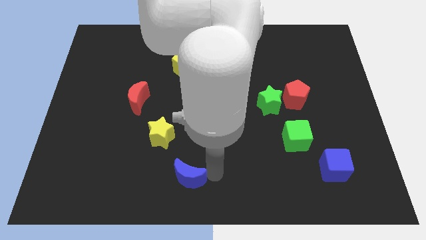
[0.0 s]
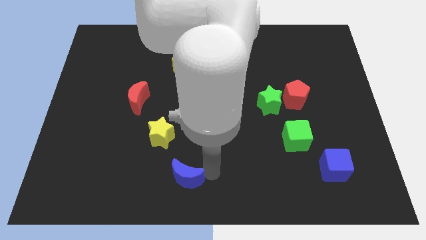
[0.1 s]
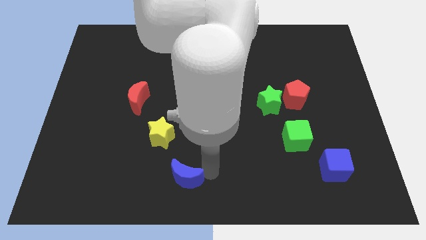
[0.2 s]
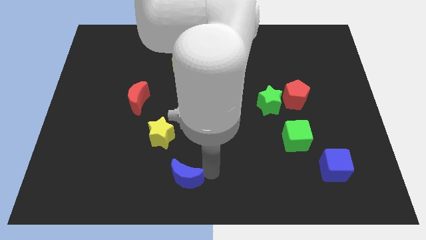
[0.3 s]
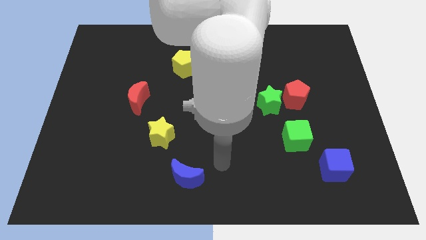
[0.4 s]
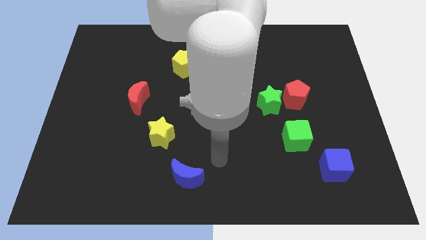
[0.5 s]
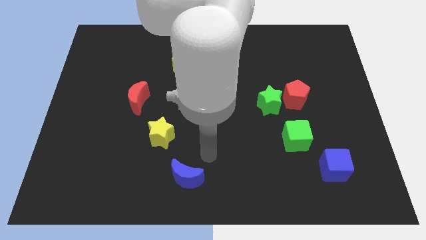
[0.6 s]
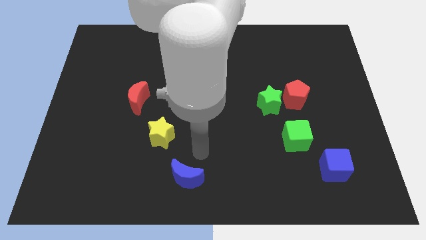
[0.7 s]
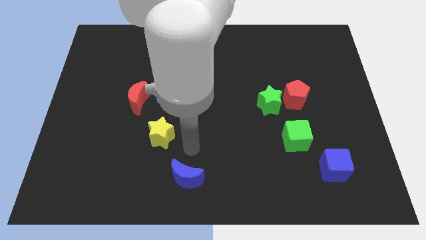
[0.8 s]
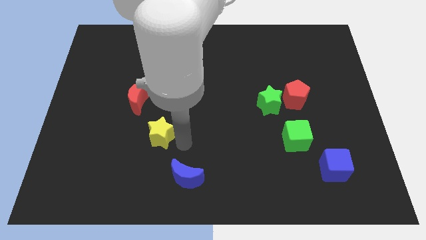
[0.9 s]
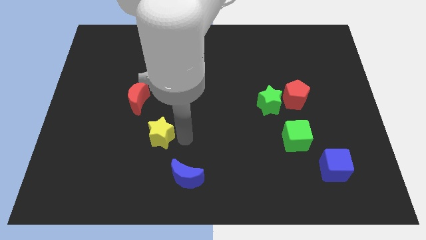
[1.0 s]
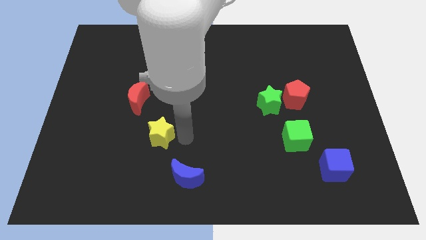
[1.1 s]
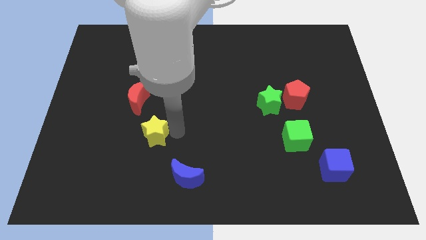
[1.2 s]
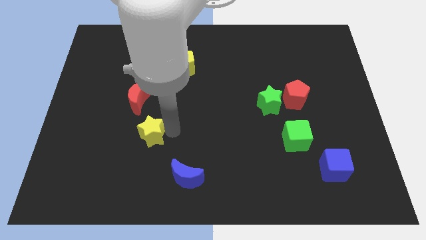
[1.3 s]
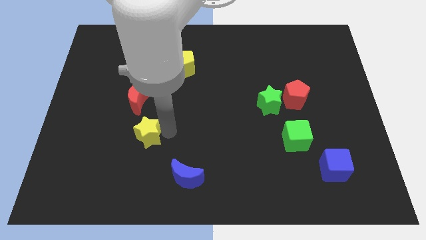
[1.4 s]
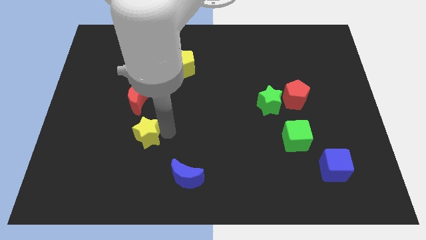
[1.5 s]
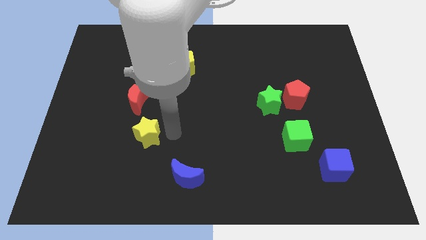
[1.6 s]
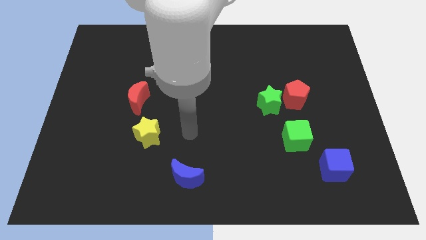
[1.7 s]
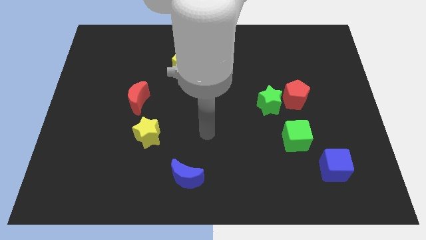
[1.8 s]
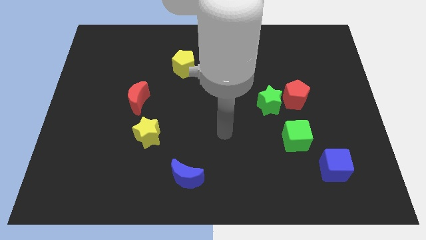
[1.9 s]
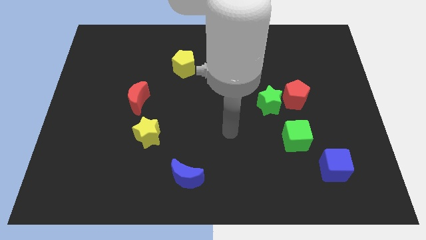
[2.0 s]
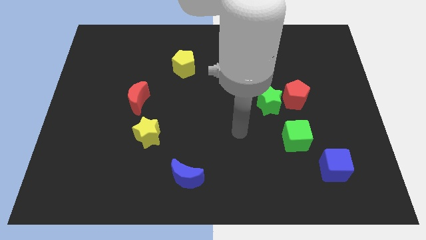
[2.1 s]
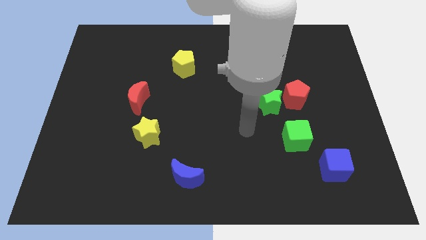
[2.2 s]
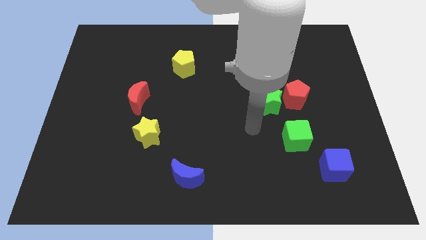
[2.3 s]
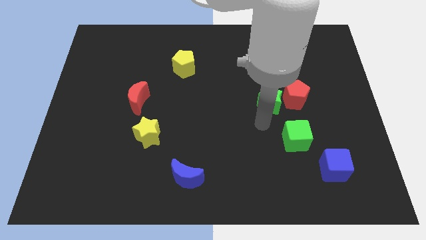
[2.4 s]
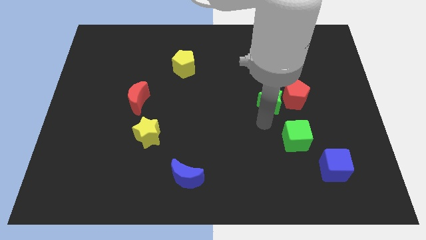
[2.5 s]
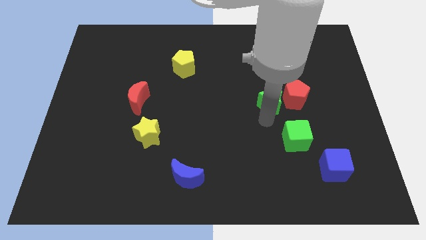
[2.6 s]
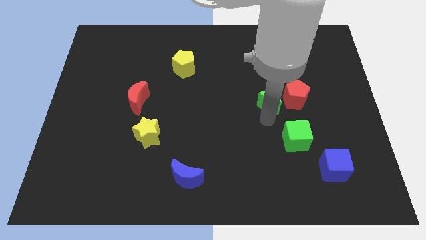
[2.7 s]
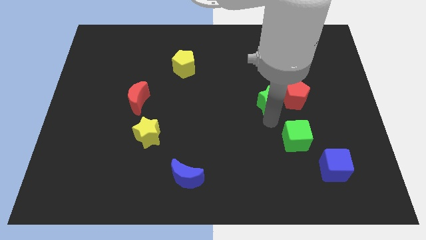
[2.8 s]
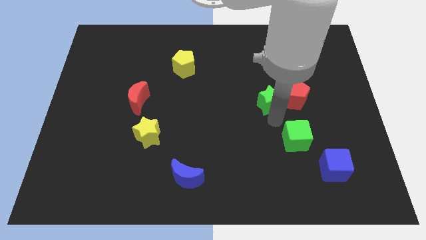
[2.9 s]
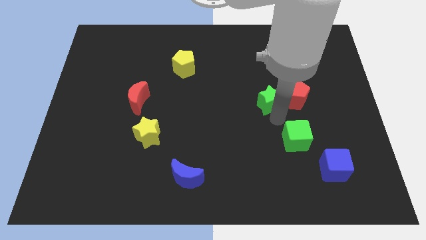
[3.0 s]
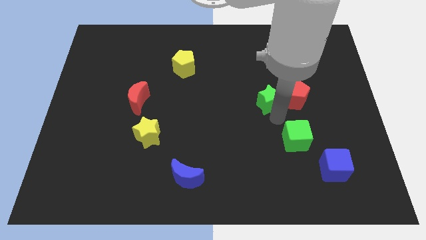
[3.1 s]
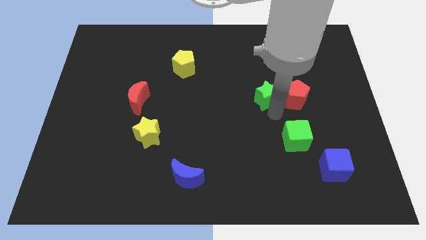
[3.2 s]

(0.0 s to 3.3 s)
place the arm below the green star

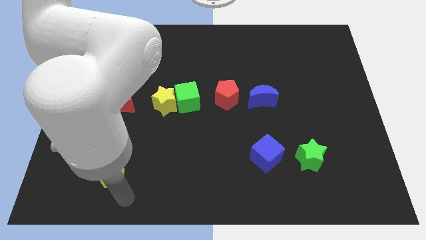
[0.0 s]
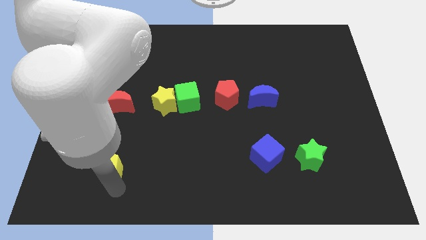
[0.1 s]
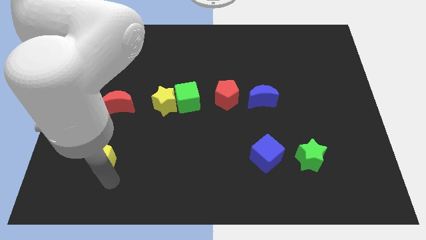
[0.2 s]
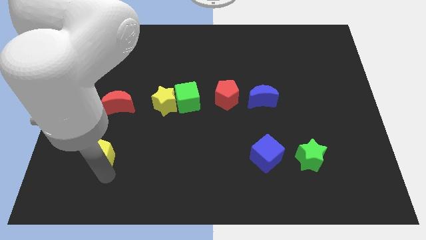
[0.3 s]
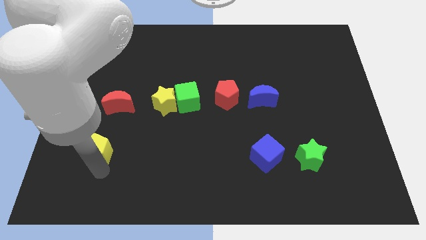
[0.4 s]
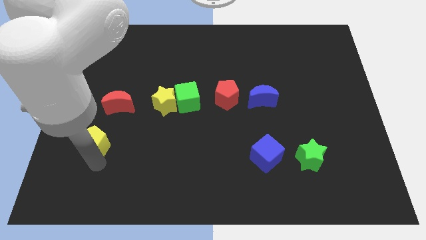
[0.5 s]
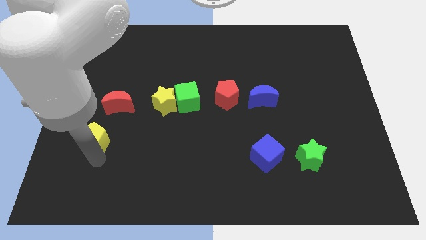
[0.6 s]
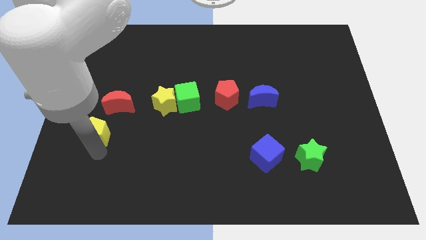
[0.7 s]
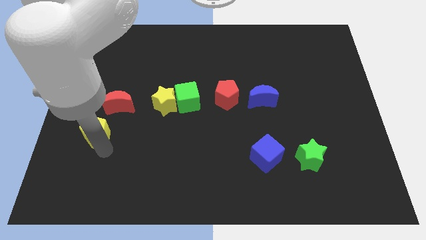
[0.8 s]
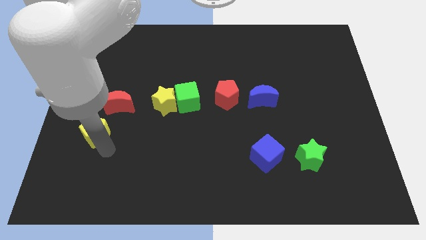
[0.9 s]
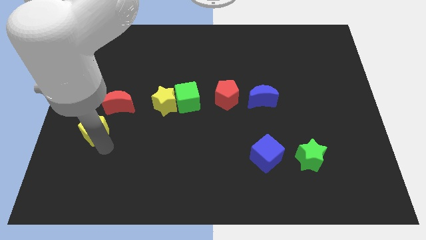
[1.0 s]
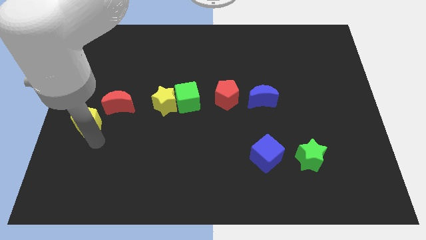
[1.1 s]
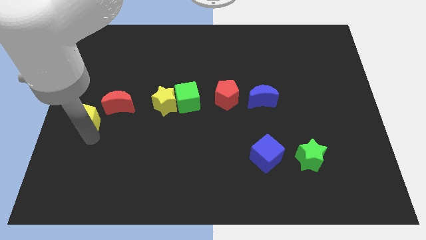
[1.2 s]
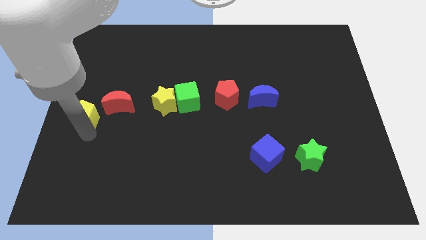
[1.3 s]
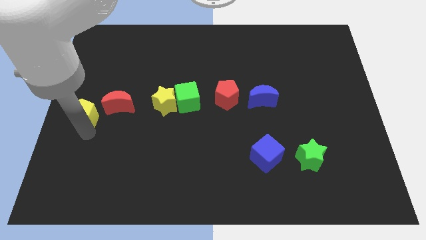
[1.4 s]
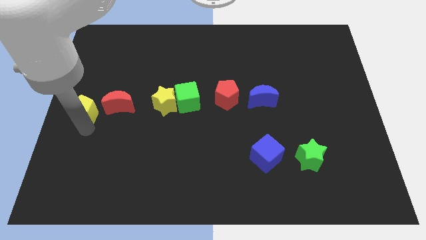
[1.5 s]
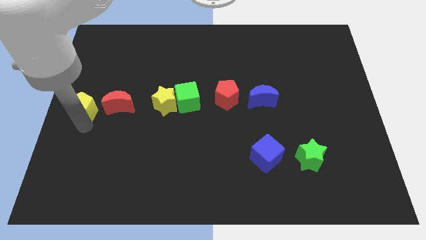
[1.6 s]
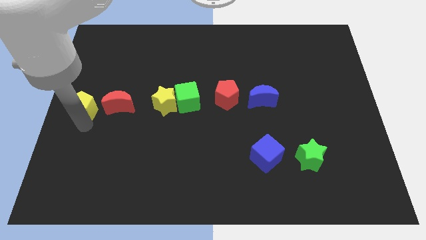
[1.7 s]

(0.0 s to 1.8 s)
drag the yellow pentagon to the left of red moon

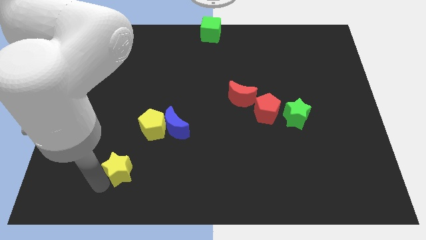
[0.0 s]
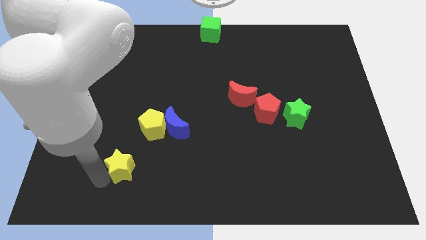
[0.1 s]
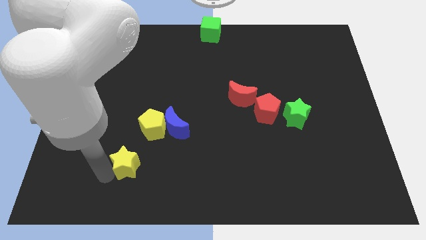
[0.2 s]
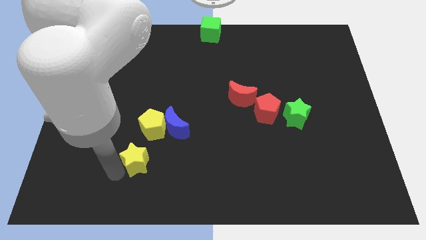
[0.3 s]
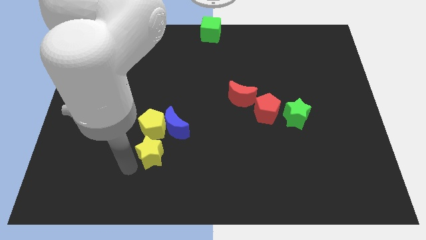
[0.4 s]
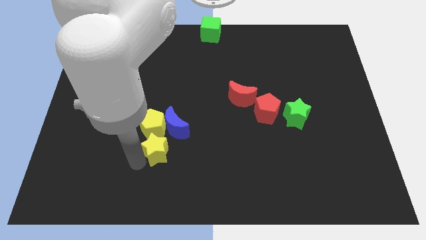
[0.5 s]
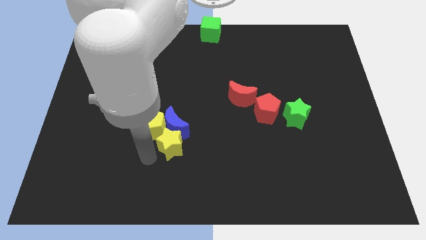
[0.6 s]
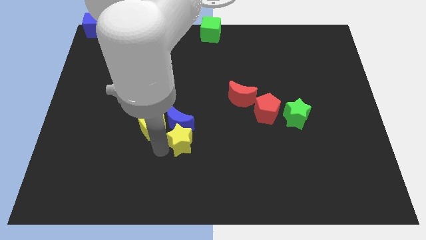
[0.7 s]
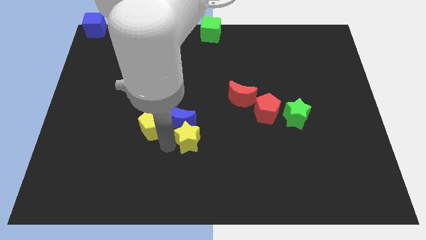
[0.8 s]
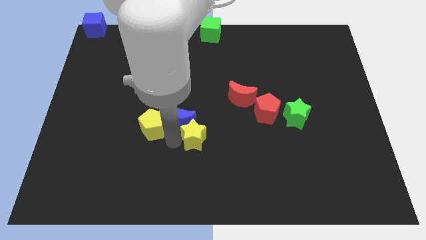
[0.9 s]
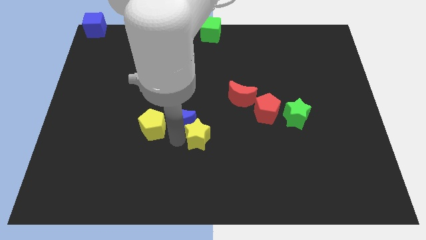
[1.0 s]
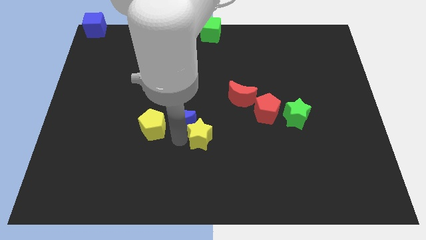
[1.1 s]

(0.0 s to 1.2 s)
slide the blue moon with the yellow star

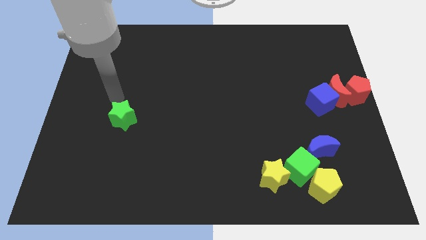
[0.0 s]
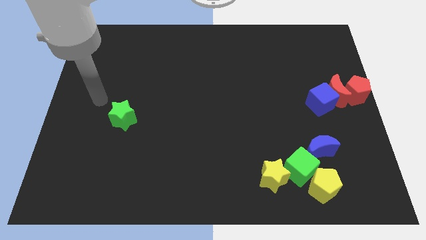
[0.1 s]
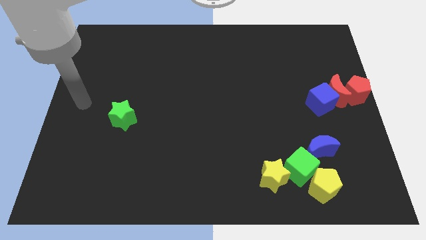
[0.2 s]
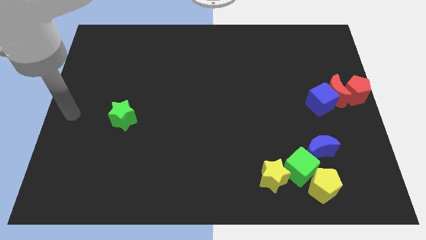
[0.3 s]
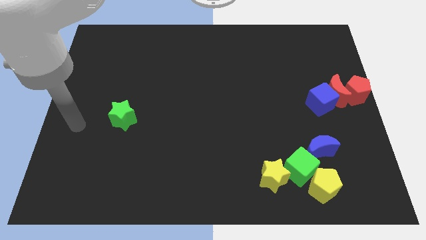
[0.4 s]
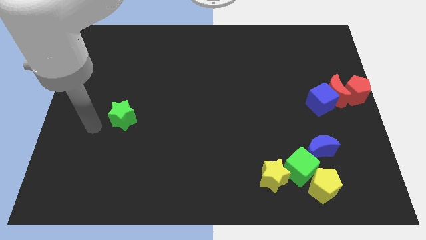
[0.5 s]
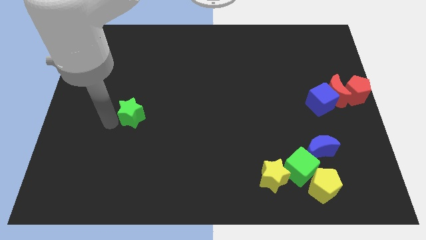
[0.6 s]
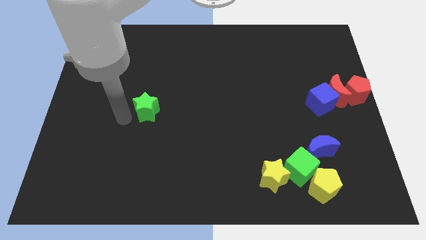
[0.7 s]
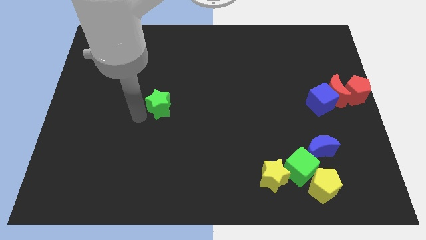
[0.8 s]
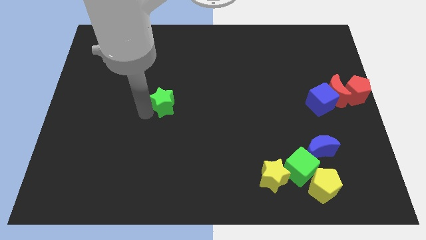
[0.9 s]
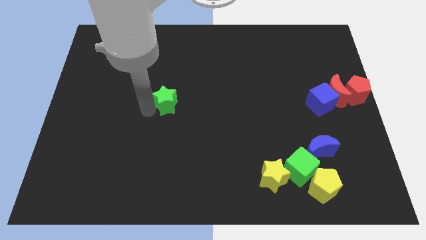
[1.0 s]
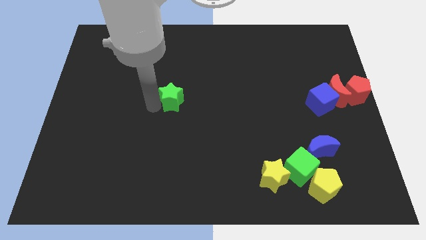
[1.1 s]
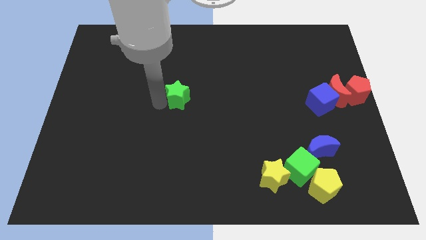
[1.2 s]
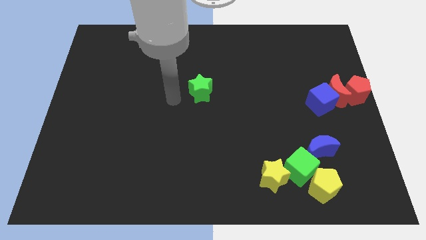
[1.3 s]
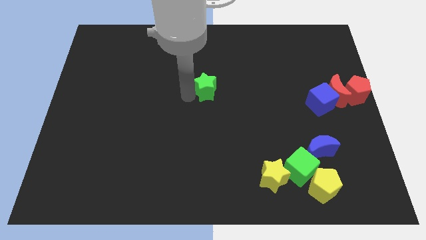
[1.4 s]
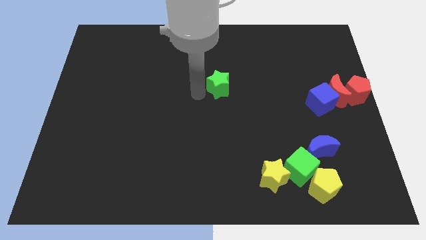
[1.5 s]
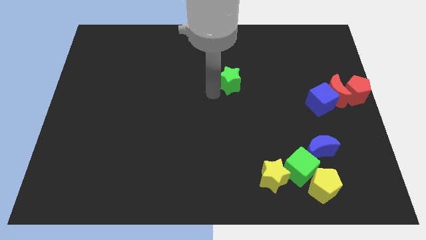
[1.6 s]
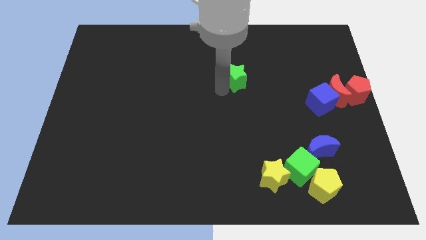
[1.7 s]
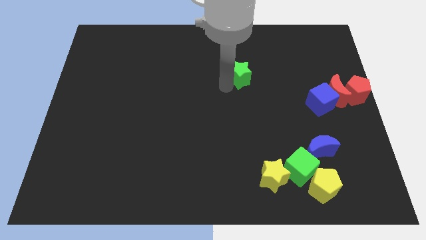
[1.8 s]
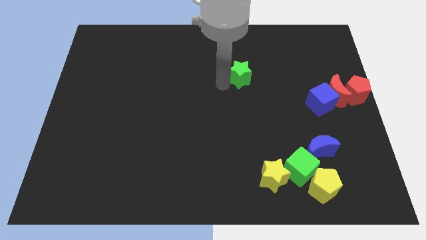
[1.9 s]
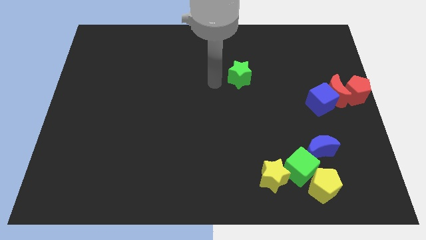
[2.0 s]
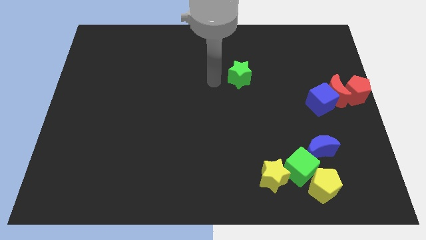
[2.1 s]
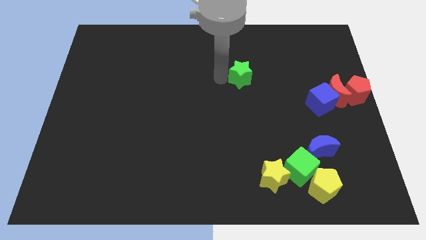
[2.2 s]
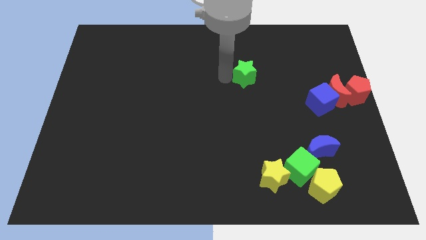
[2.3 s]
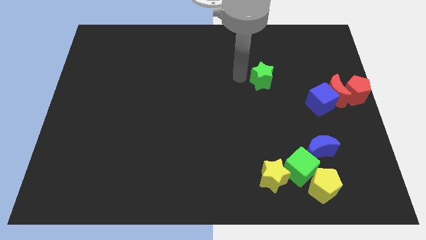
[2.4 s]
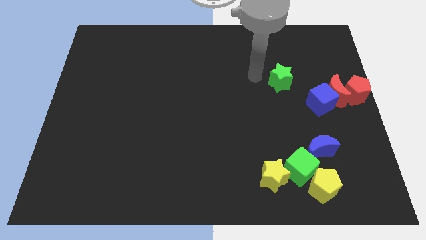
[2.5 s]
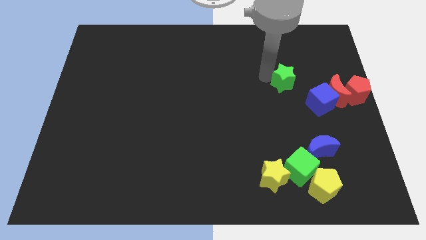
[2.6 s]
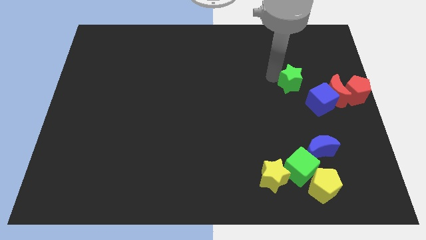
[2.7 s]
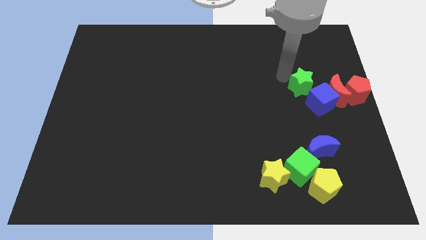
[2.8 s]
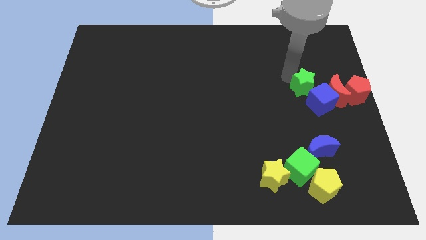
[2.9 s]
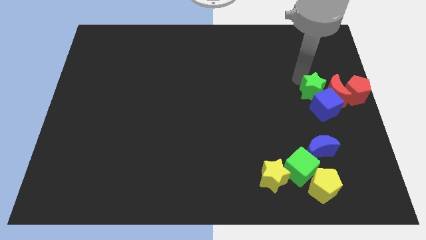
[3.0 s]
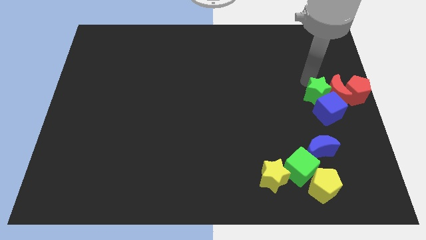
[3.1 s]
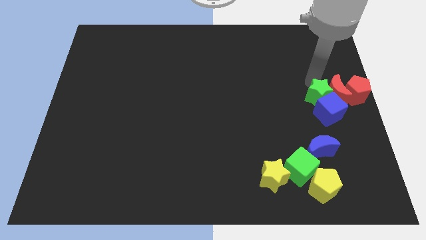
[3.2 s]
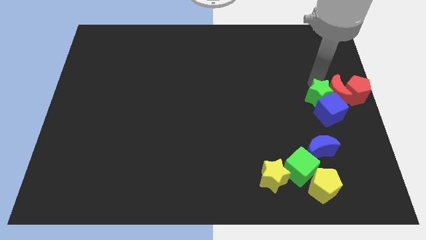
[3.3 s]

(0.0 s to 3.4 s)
push the green star into the blue cube
